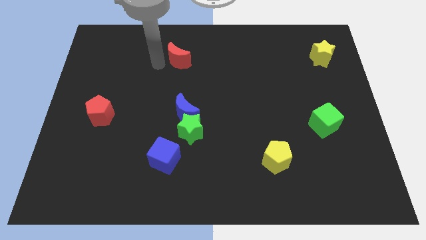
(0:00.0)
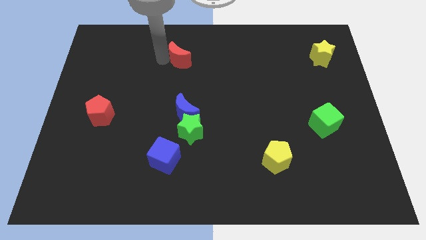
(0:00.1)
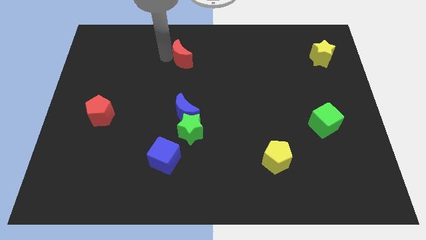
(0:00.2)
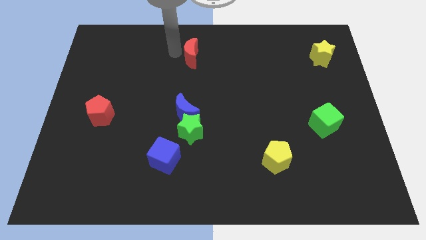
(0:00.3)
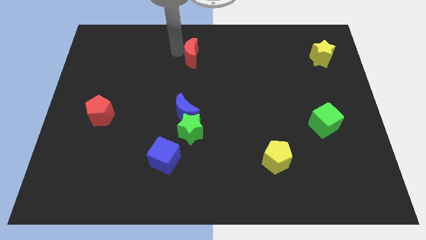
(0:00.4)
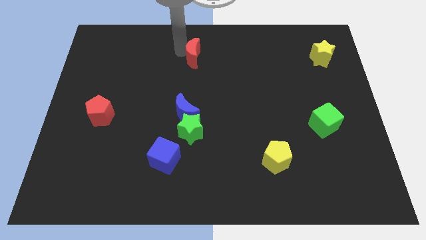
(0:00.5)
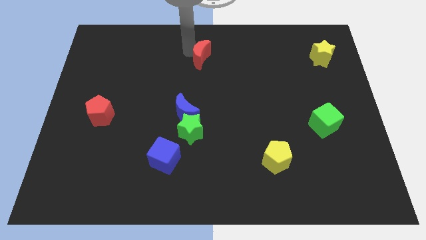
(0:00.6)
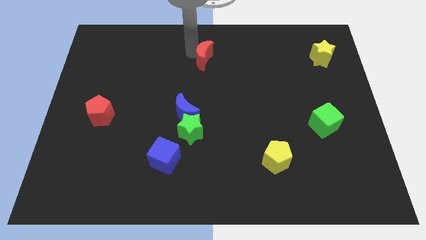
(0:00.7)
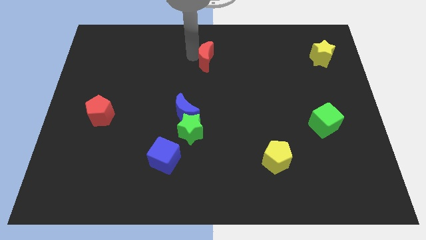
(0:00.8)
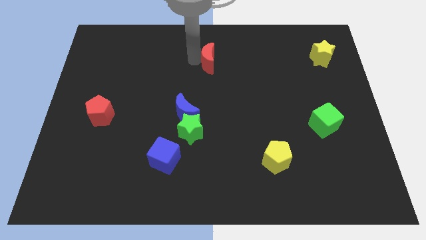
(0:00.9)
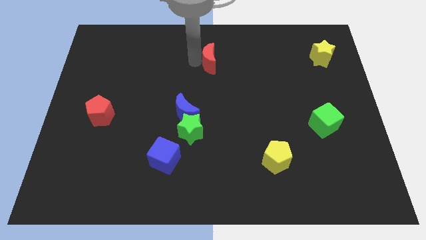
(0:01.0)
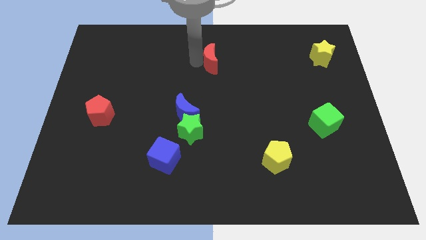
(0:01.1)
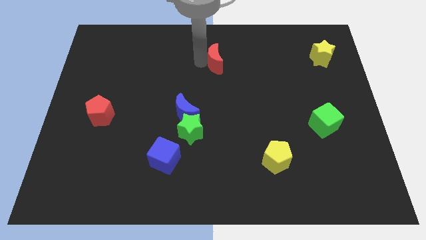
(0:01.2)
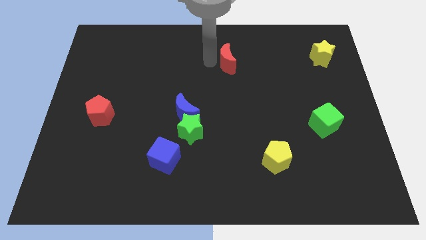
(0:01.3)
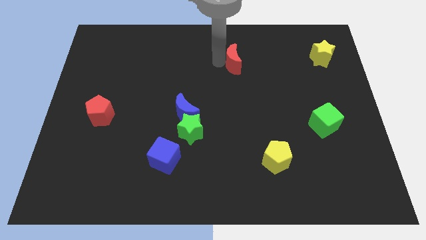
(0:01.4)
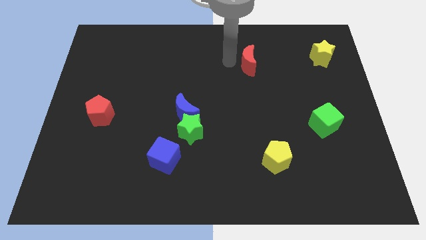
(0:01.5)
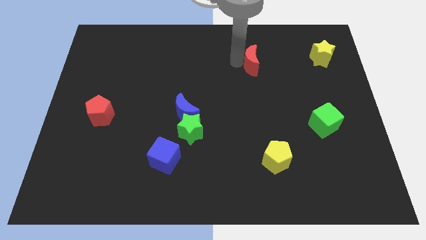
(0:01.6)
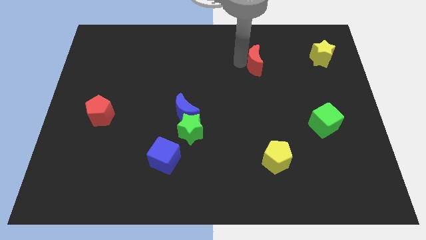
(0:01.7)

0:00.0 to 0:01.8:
push the red crescent towards right

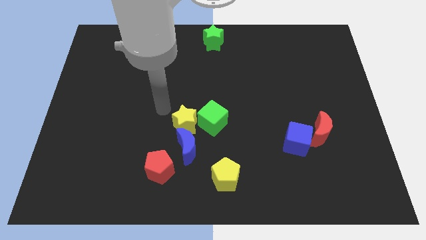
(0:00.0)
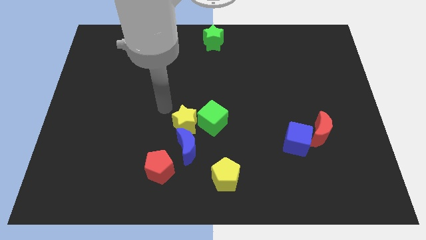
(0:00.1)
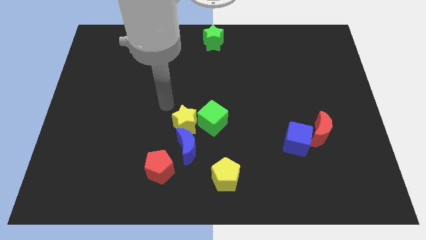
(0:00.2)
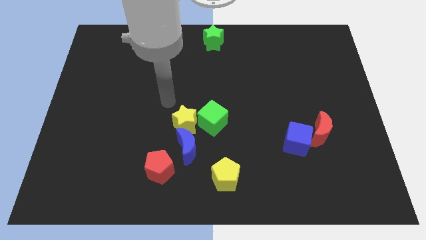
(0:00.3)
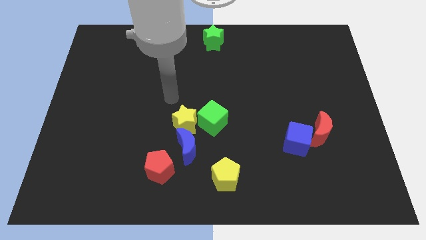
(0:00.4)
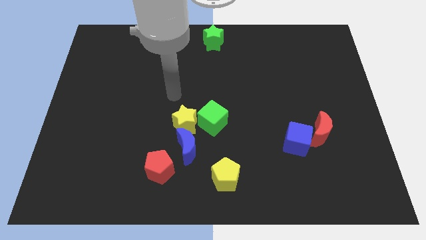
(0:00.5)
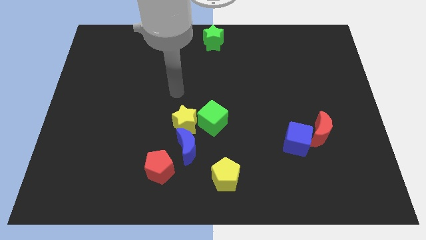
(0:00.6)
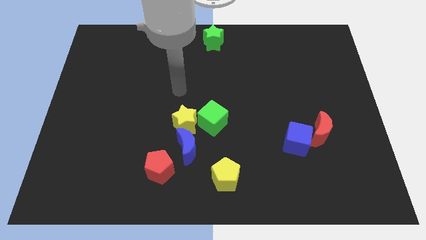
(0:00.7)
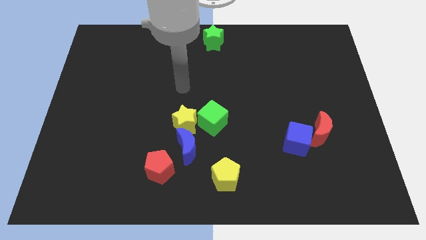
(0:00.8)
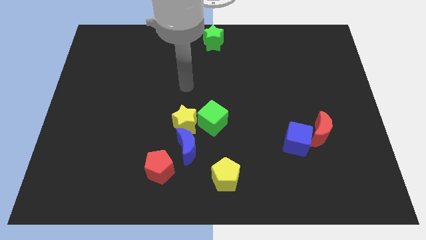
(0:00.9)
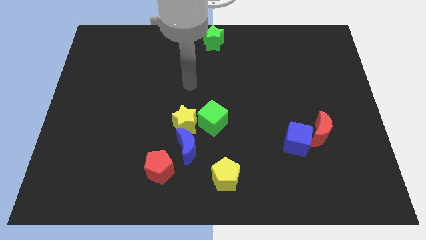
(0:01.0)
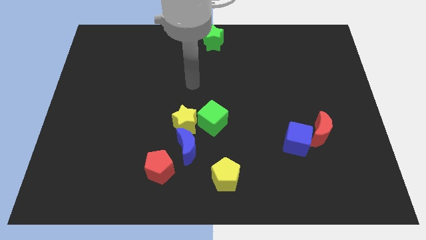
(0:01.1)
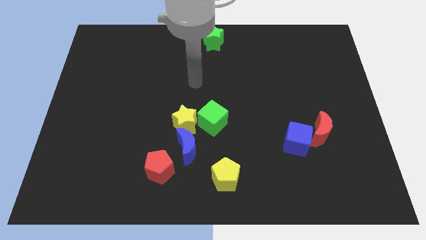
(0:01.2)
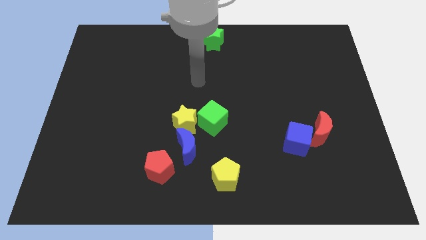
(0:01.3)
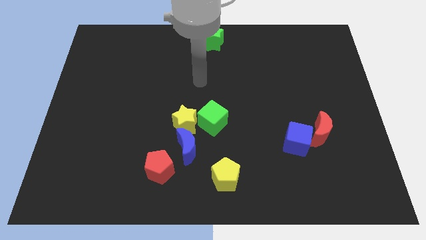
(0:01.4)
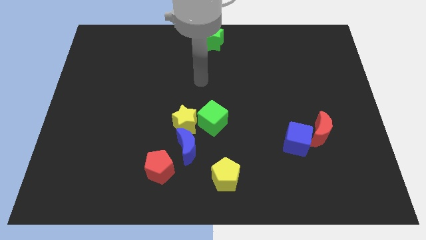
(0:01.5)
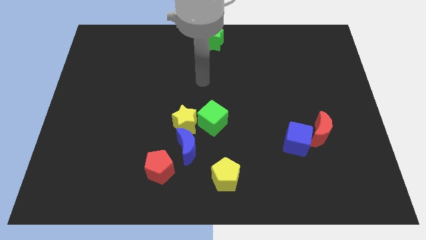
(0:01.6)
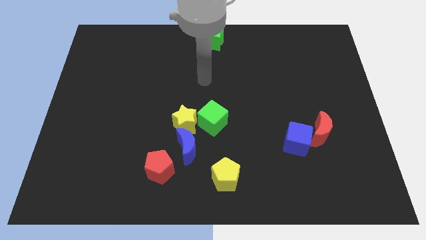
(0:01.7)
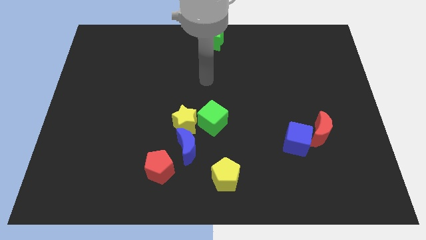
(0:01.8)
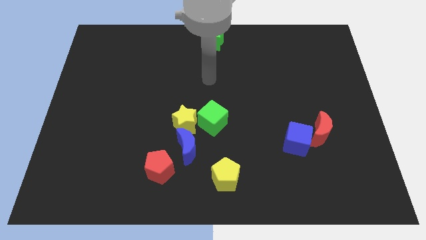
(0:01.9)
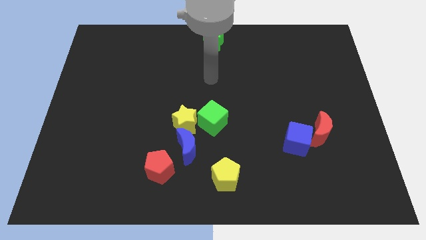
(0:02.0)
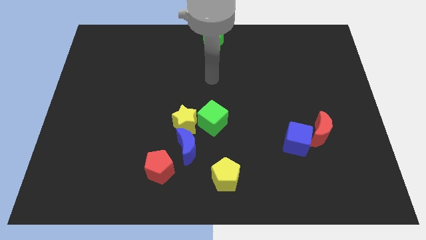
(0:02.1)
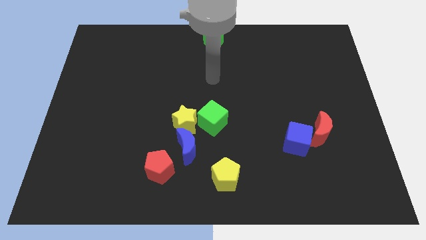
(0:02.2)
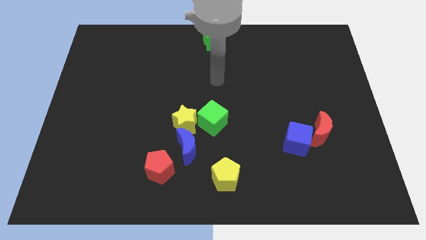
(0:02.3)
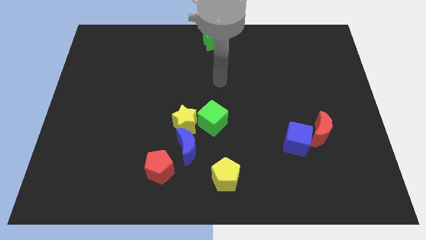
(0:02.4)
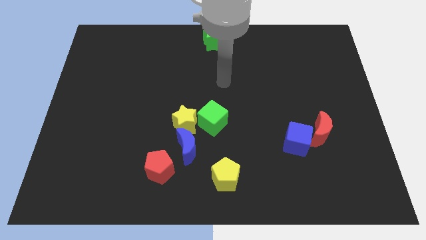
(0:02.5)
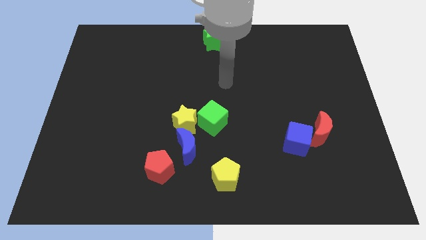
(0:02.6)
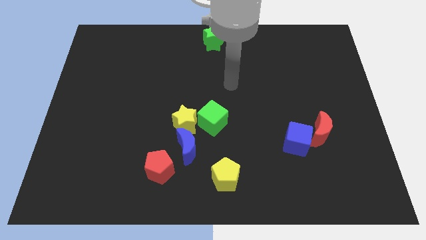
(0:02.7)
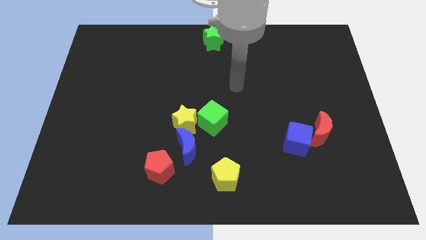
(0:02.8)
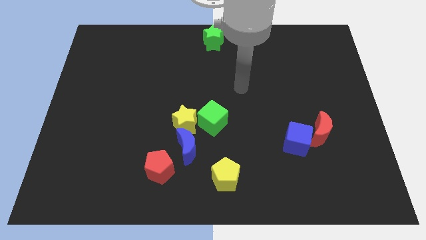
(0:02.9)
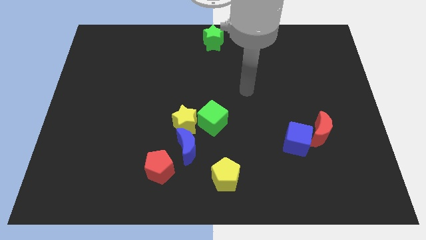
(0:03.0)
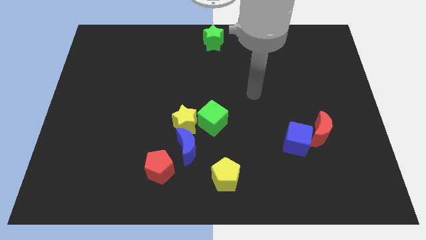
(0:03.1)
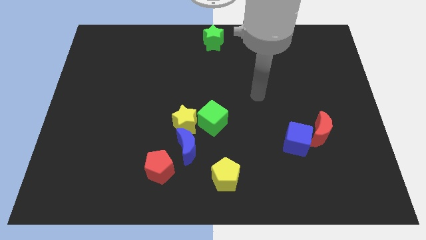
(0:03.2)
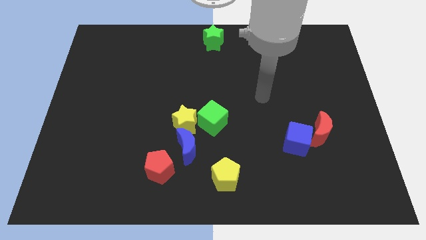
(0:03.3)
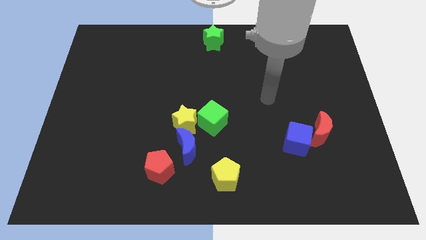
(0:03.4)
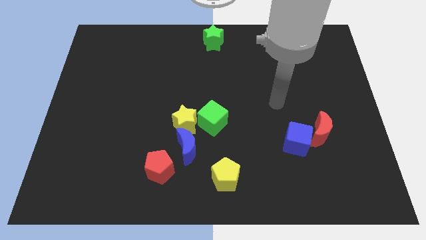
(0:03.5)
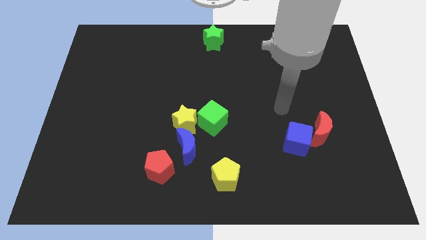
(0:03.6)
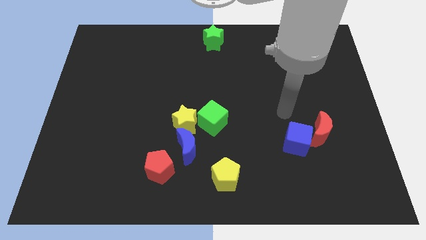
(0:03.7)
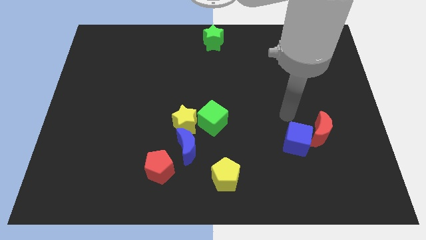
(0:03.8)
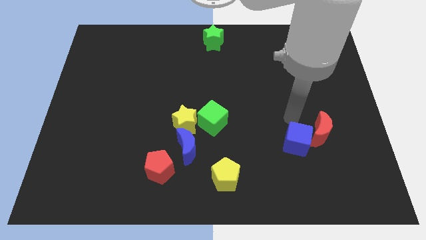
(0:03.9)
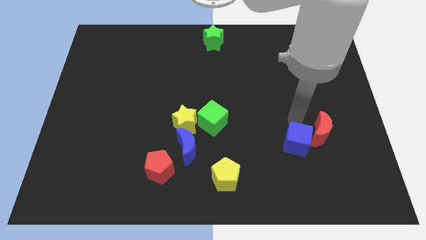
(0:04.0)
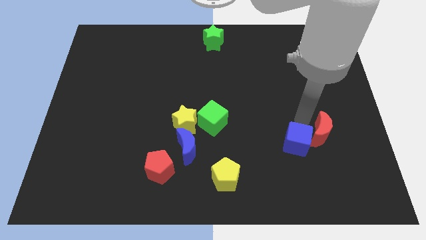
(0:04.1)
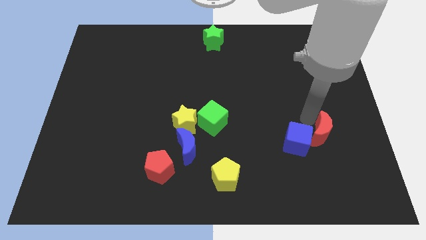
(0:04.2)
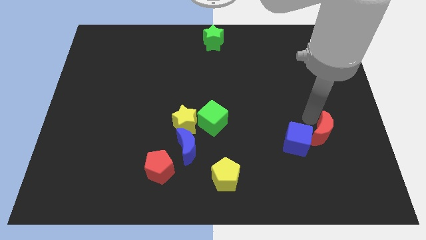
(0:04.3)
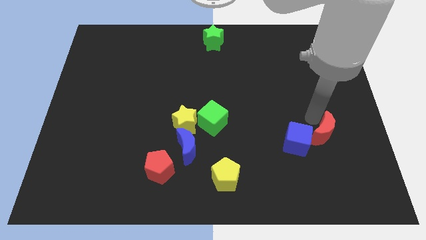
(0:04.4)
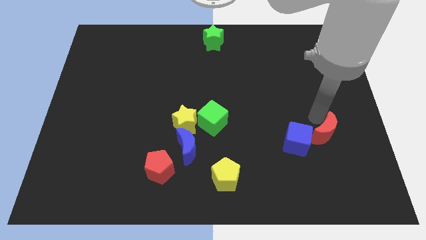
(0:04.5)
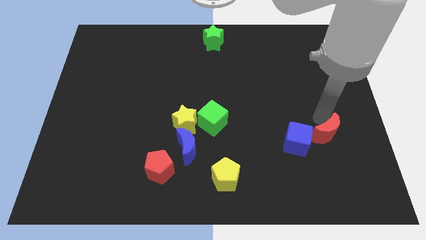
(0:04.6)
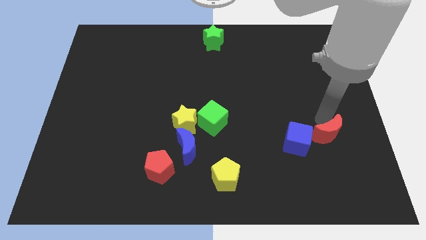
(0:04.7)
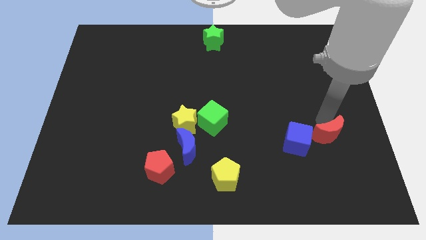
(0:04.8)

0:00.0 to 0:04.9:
move your arm close to the red moon

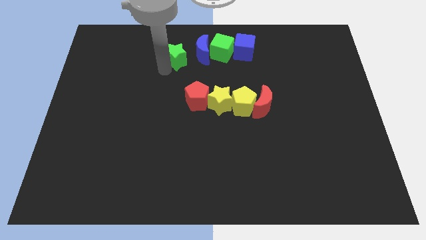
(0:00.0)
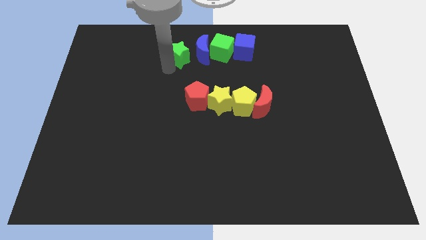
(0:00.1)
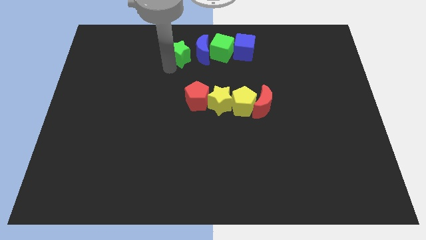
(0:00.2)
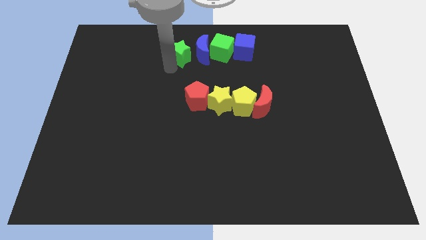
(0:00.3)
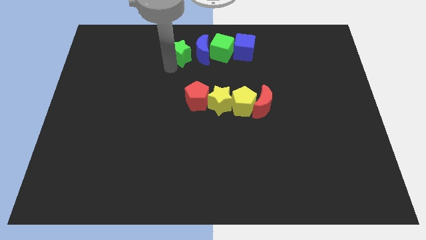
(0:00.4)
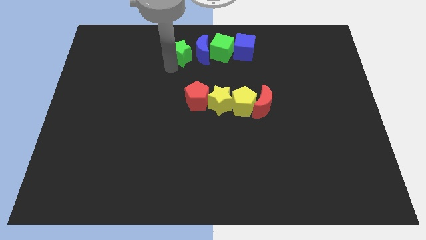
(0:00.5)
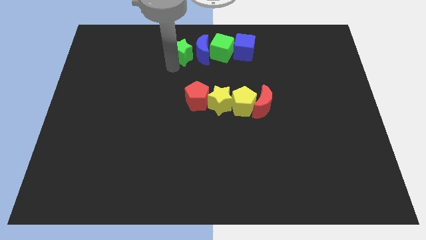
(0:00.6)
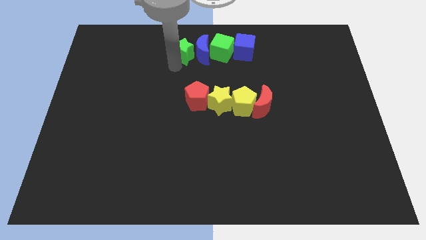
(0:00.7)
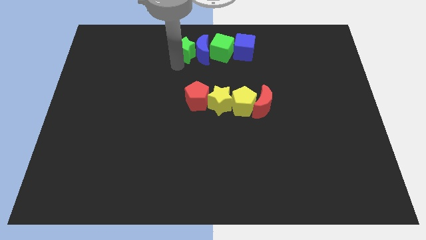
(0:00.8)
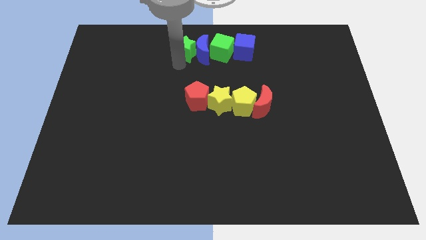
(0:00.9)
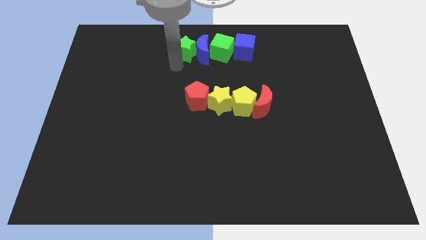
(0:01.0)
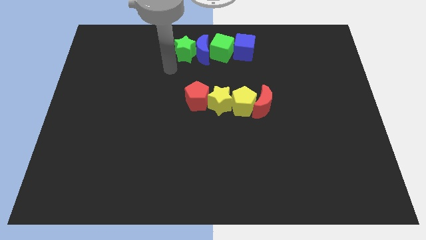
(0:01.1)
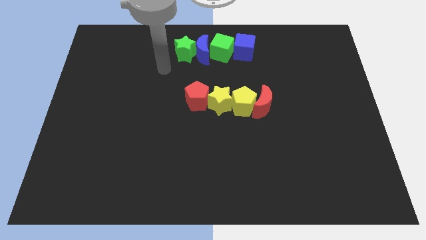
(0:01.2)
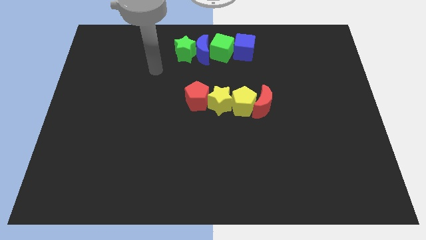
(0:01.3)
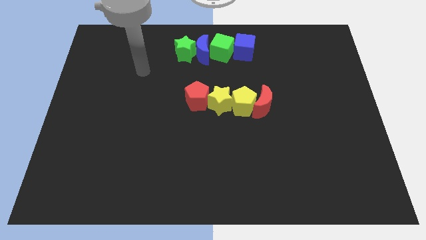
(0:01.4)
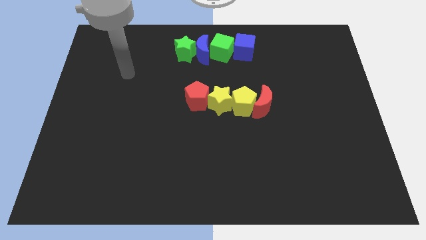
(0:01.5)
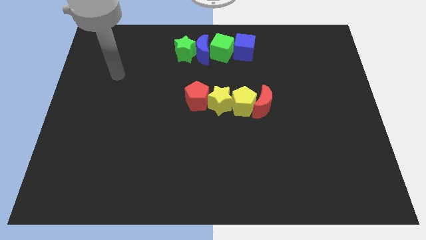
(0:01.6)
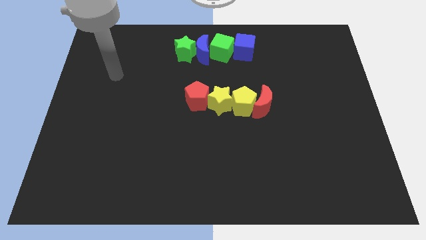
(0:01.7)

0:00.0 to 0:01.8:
push the green star into the blue crescent

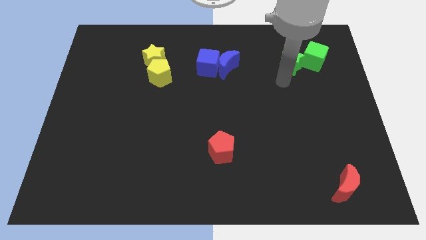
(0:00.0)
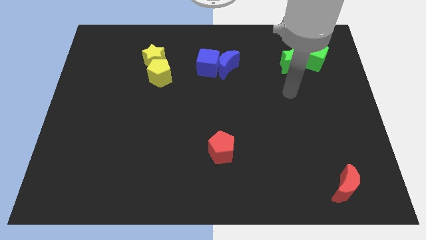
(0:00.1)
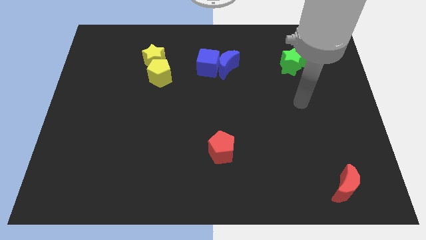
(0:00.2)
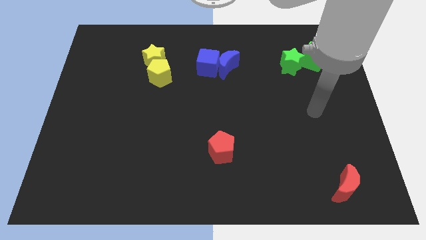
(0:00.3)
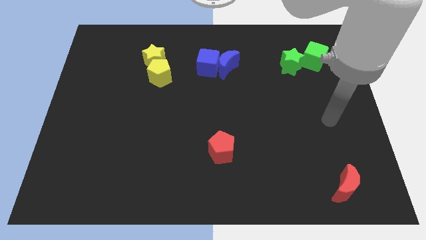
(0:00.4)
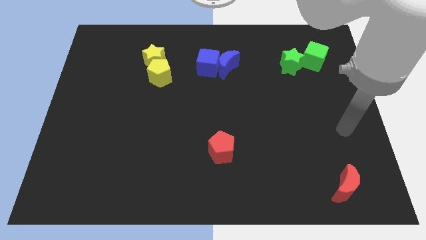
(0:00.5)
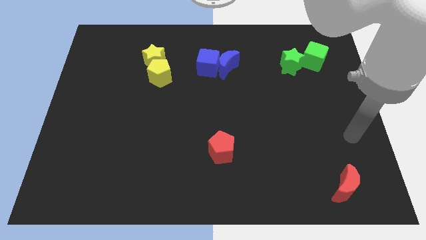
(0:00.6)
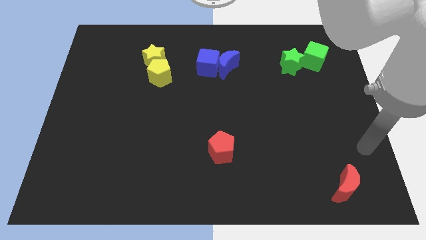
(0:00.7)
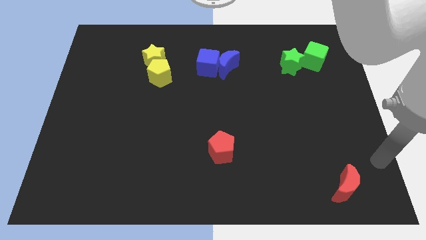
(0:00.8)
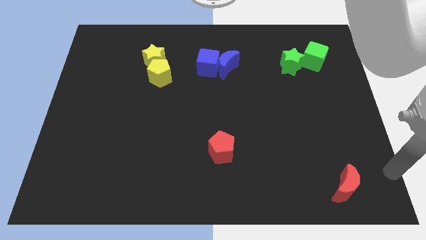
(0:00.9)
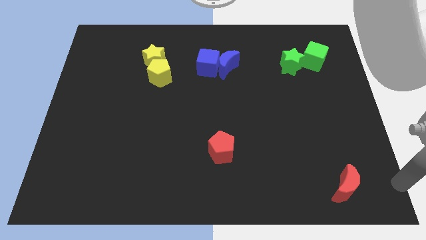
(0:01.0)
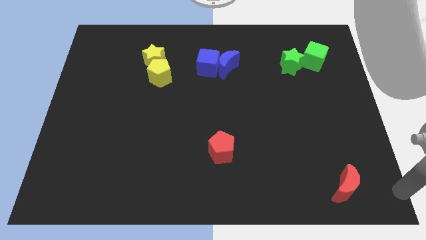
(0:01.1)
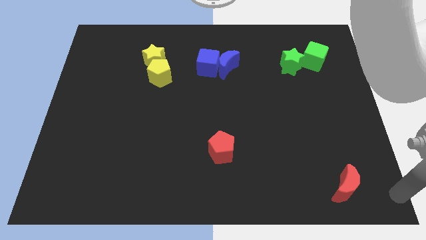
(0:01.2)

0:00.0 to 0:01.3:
place your arm at the bottom right corner of the board
